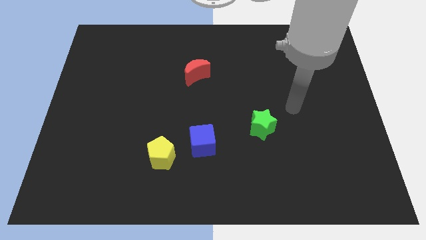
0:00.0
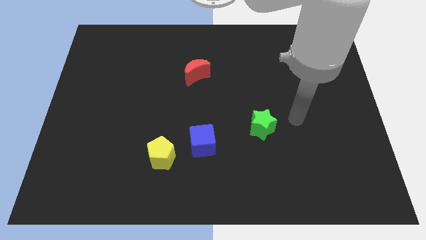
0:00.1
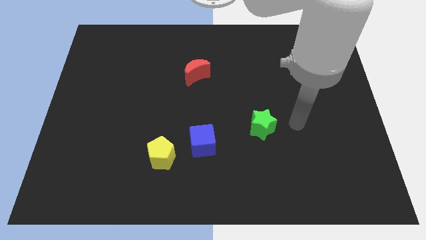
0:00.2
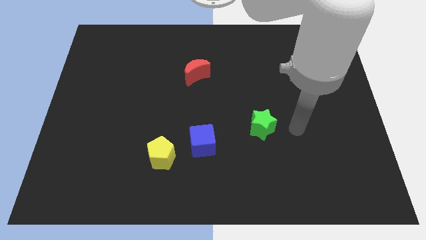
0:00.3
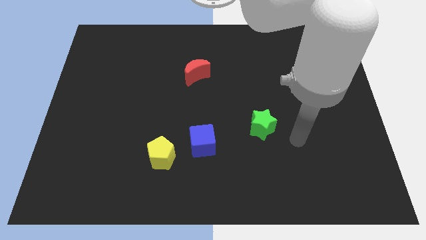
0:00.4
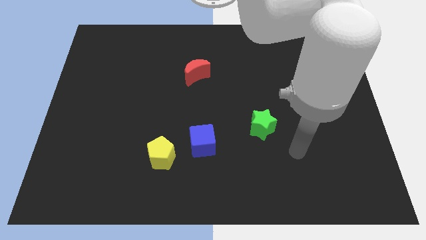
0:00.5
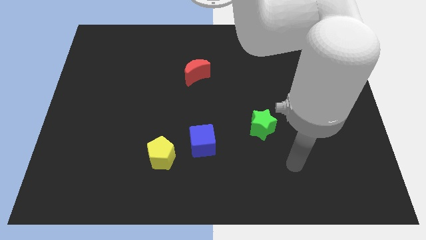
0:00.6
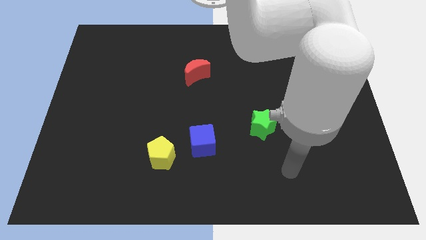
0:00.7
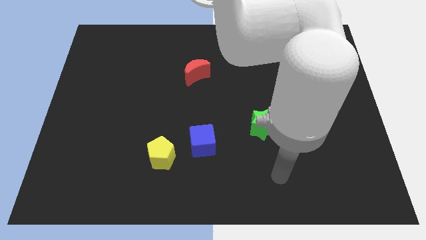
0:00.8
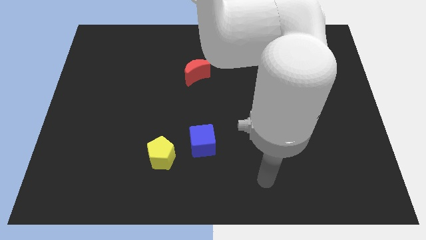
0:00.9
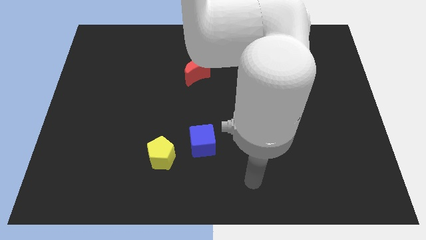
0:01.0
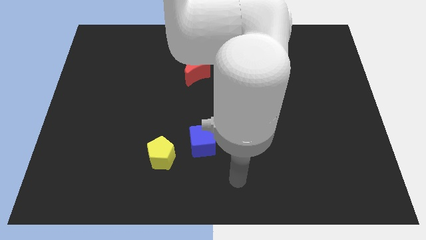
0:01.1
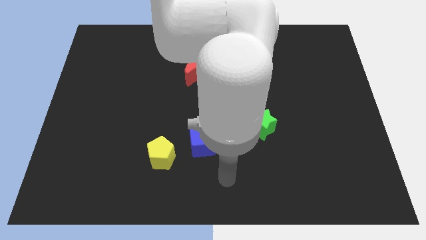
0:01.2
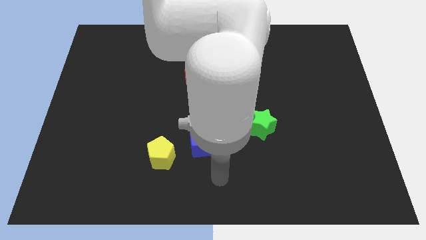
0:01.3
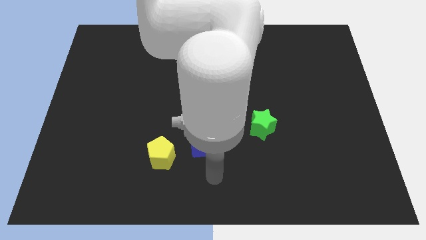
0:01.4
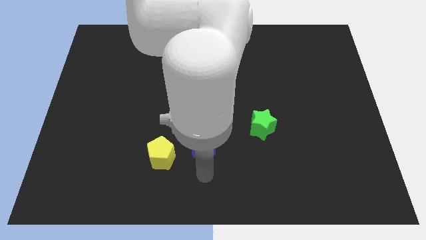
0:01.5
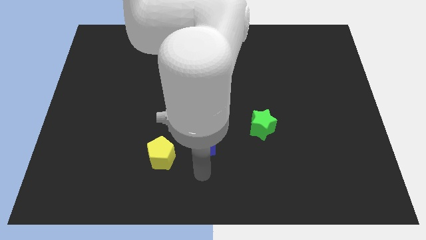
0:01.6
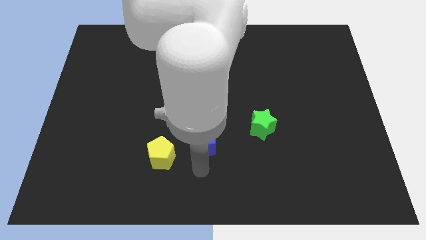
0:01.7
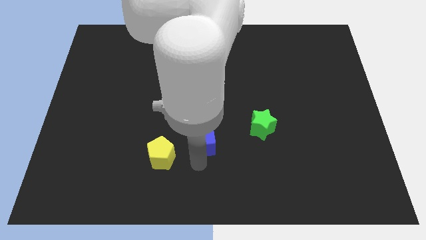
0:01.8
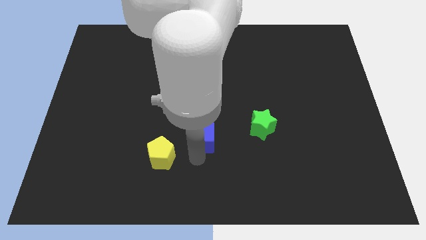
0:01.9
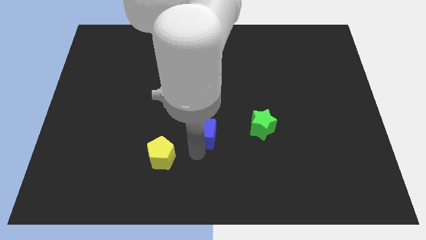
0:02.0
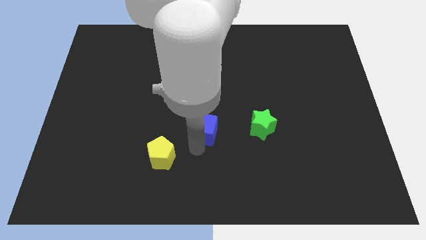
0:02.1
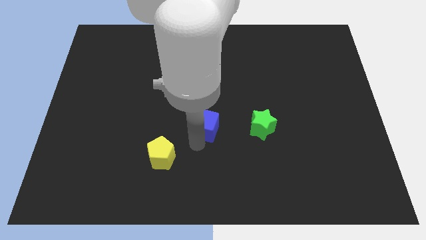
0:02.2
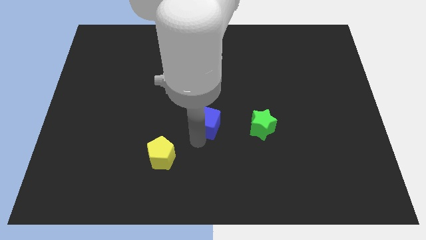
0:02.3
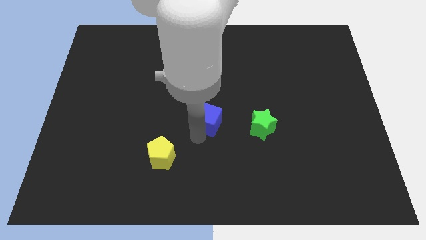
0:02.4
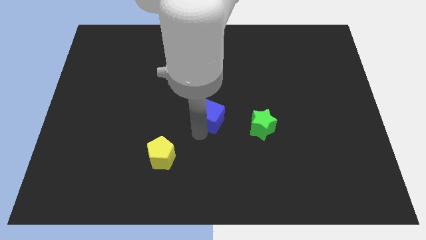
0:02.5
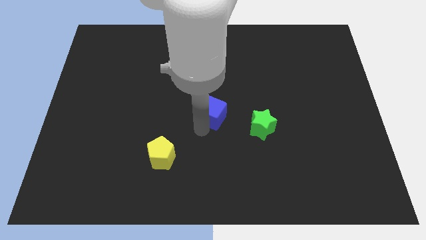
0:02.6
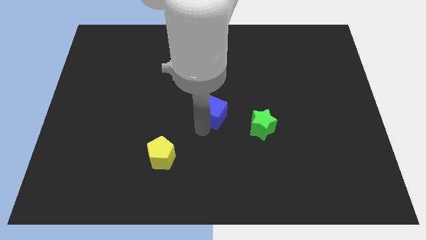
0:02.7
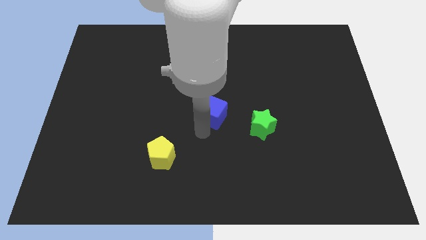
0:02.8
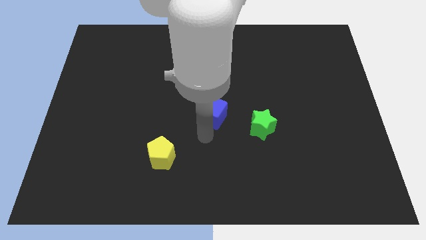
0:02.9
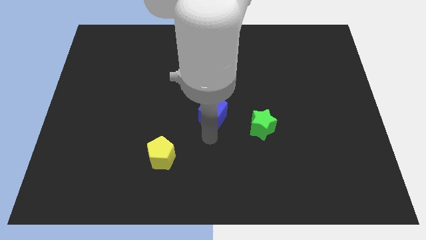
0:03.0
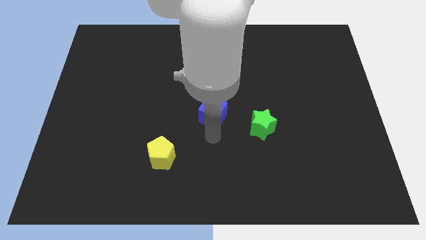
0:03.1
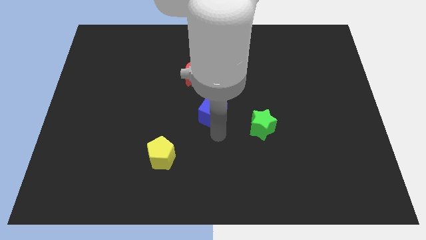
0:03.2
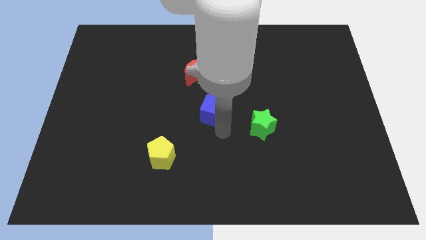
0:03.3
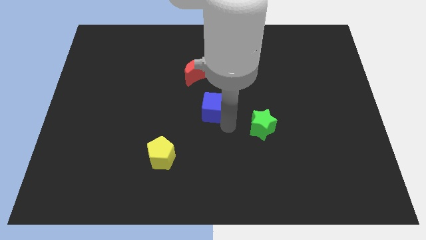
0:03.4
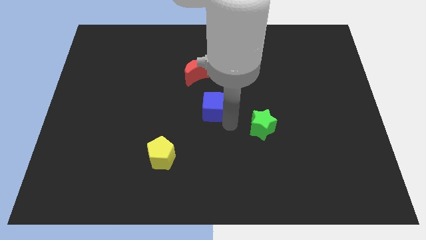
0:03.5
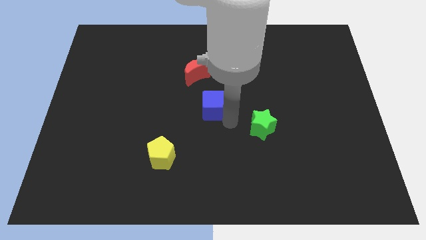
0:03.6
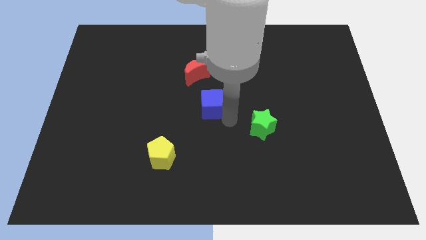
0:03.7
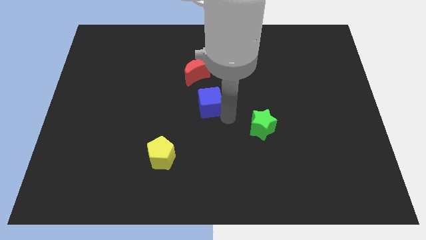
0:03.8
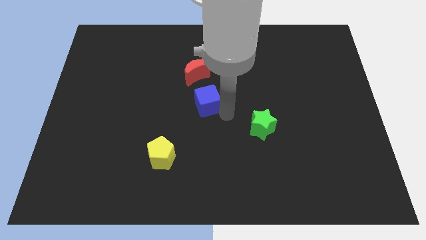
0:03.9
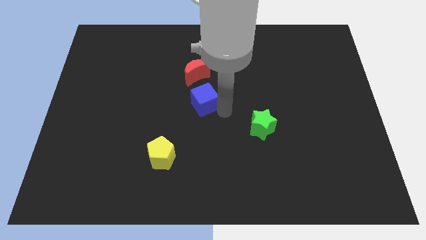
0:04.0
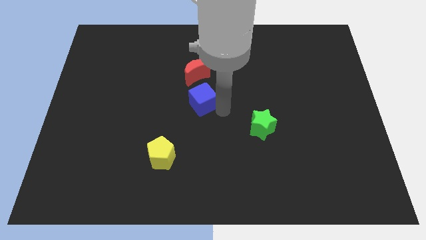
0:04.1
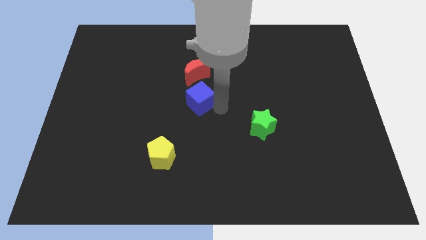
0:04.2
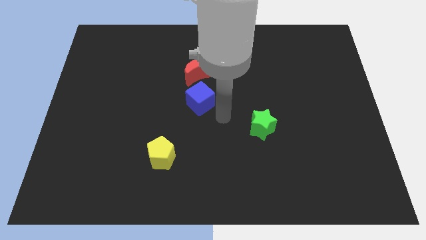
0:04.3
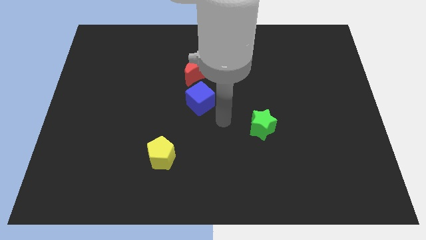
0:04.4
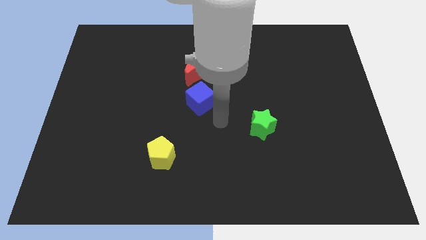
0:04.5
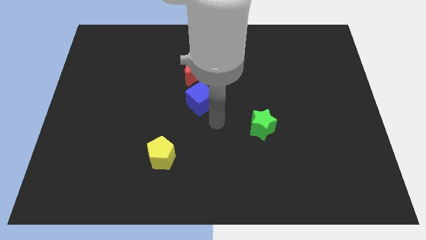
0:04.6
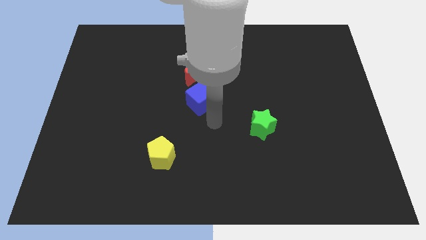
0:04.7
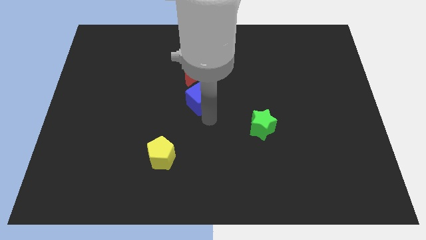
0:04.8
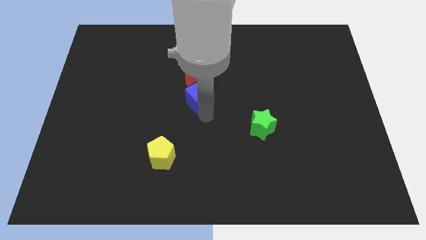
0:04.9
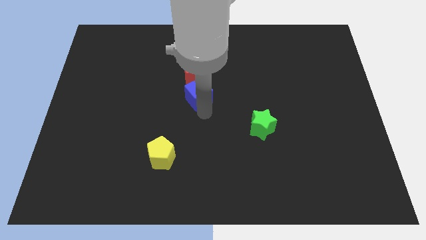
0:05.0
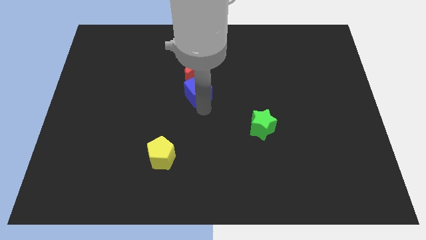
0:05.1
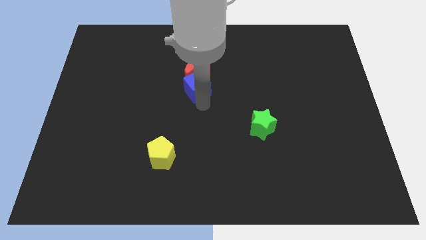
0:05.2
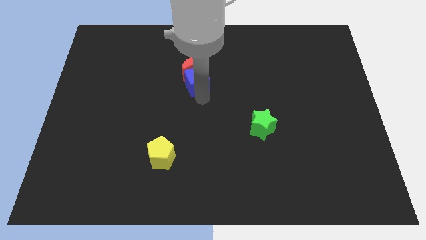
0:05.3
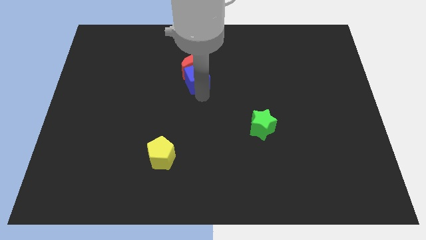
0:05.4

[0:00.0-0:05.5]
move the blue cube next to the moon

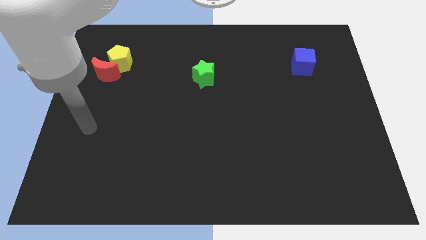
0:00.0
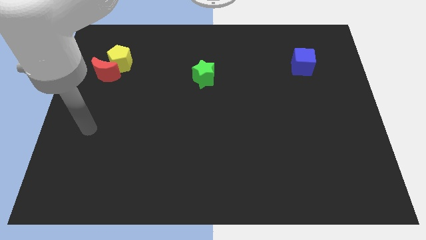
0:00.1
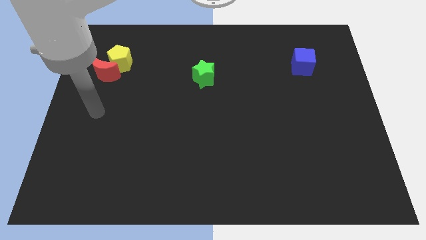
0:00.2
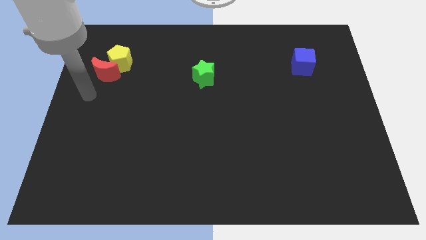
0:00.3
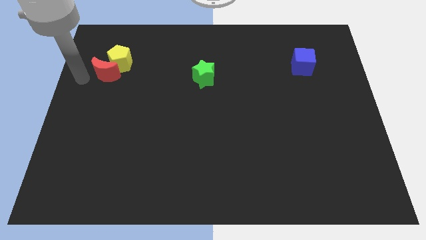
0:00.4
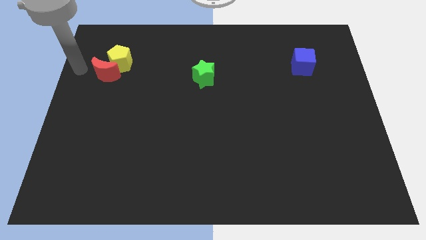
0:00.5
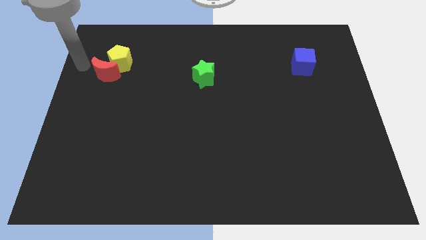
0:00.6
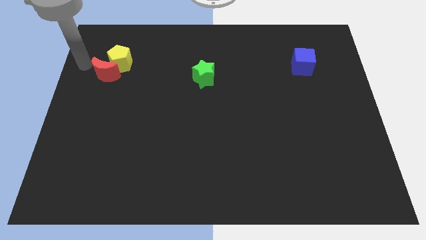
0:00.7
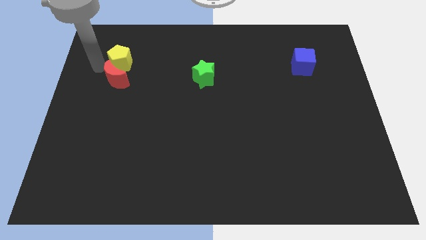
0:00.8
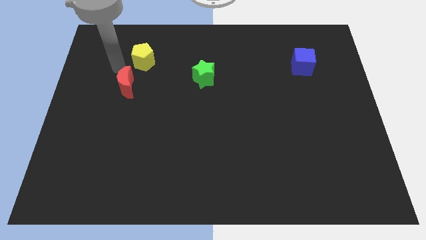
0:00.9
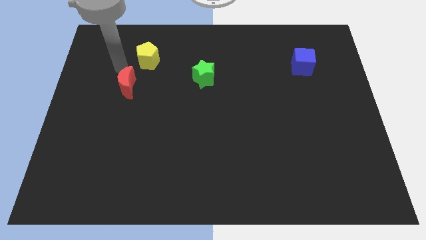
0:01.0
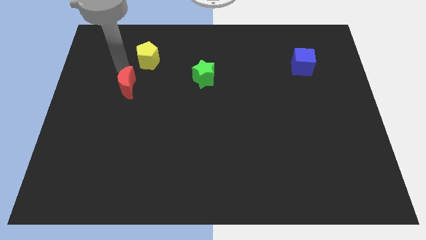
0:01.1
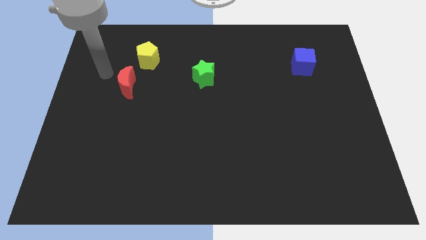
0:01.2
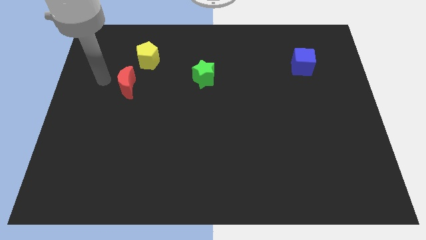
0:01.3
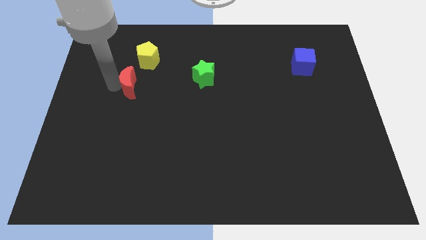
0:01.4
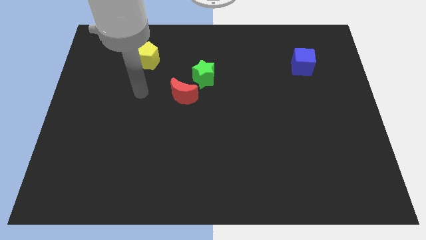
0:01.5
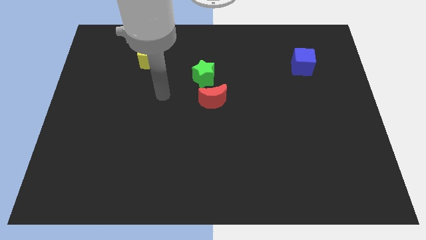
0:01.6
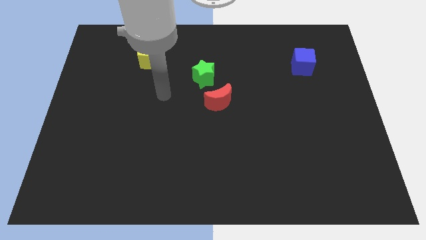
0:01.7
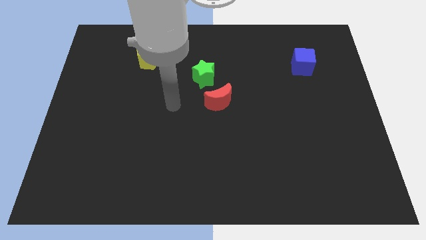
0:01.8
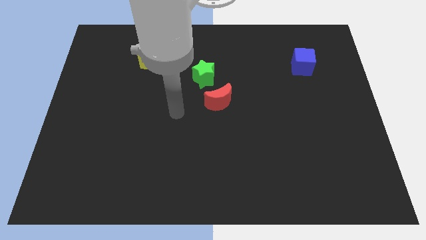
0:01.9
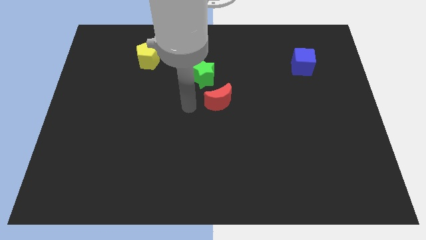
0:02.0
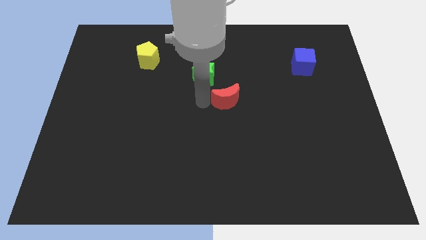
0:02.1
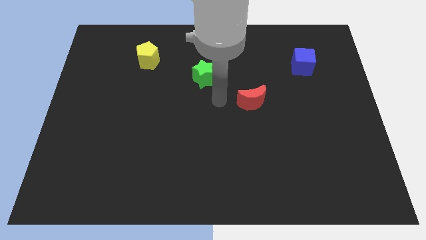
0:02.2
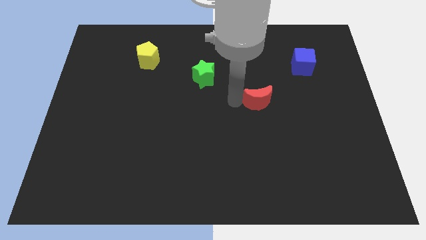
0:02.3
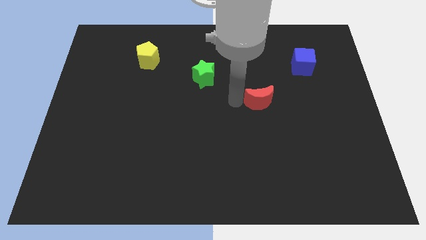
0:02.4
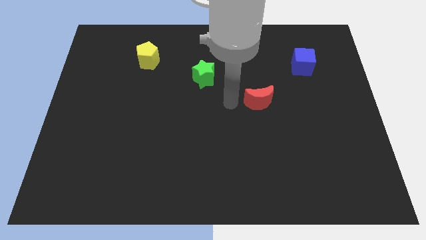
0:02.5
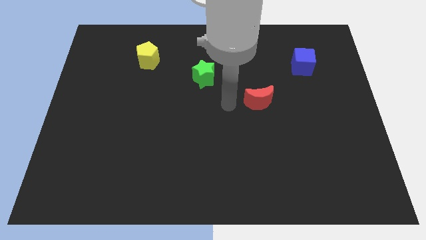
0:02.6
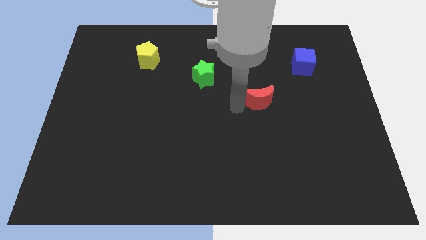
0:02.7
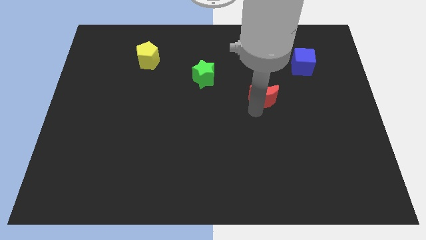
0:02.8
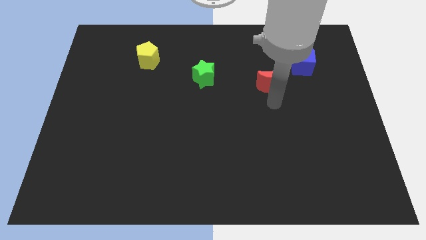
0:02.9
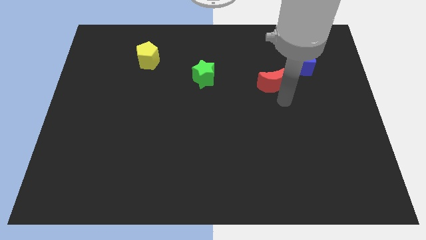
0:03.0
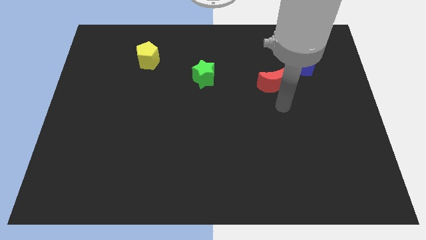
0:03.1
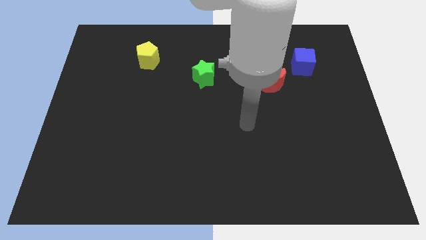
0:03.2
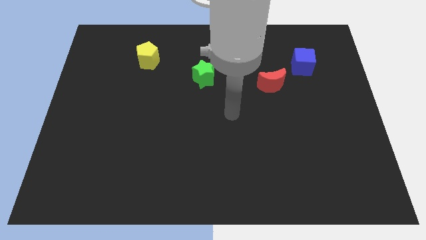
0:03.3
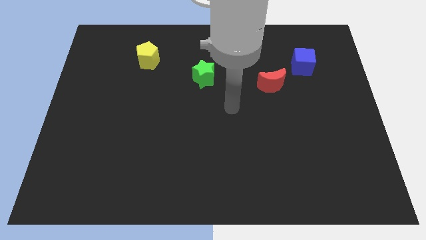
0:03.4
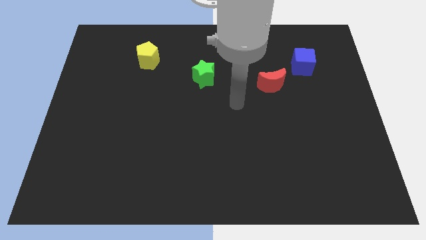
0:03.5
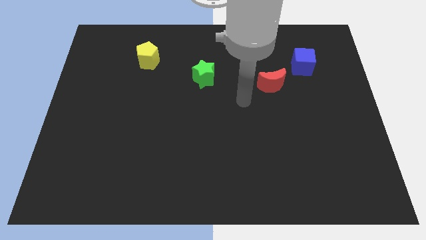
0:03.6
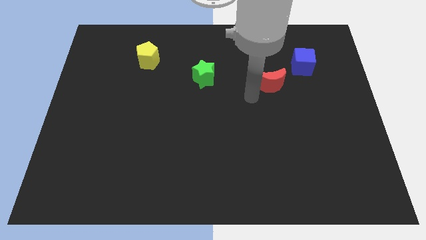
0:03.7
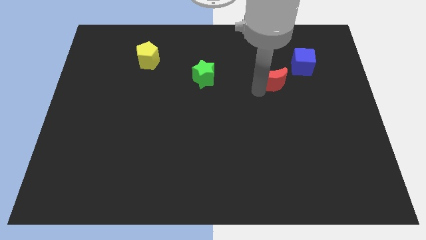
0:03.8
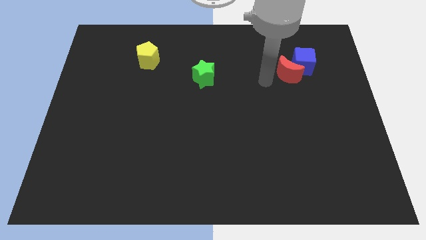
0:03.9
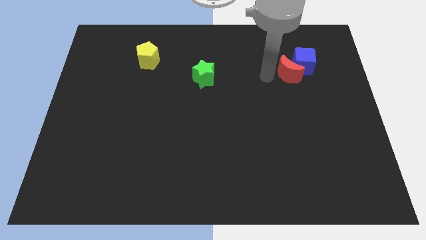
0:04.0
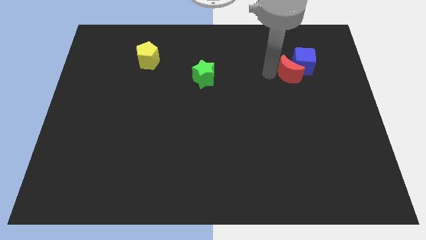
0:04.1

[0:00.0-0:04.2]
put the red moon towards the blue cube
